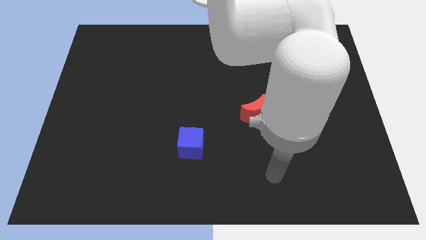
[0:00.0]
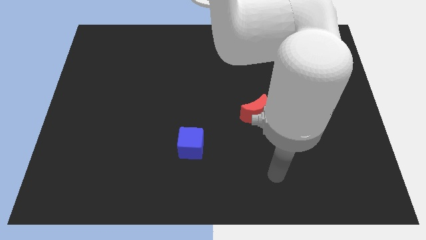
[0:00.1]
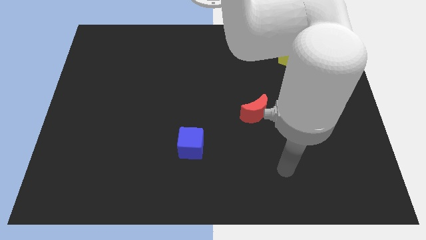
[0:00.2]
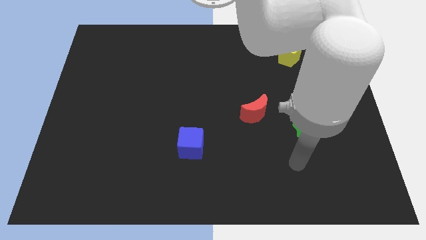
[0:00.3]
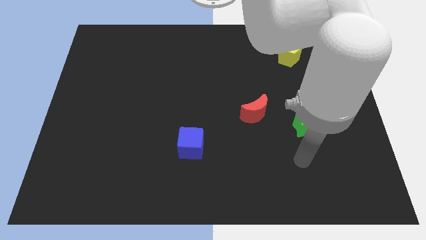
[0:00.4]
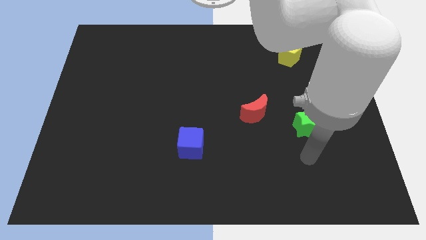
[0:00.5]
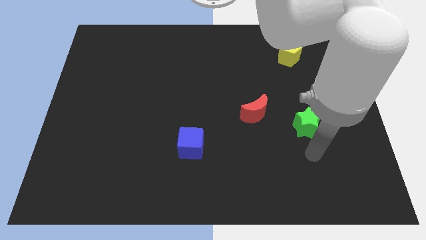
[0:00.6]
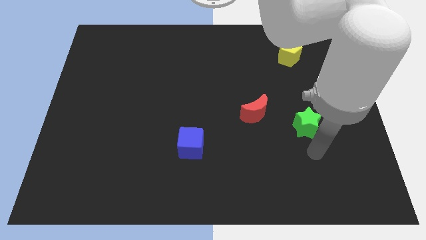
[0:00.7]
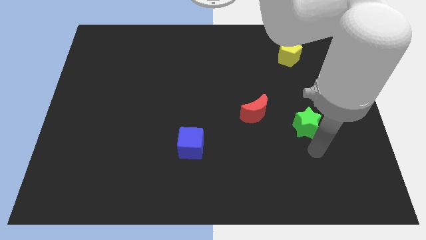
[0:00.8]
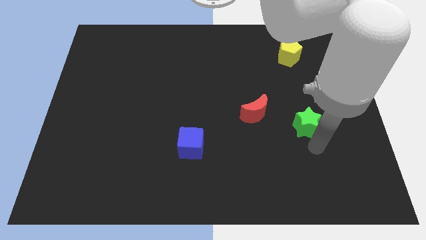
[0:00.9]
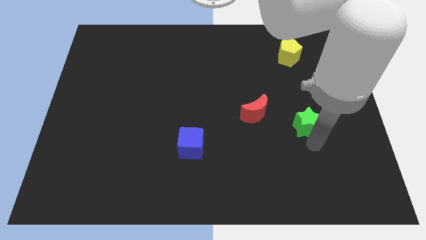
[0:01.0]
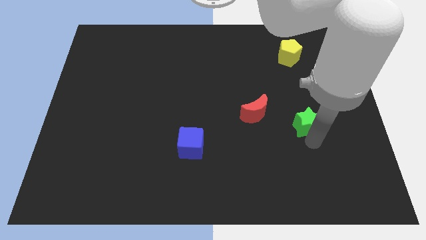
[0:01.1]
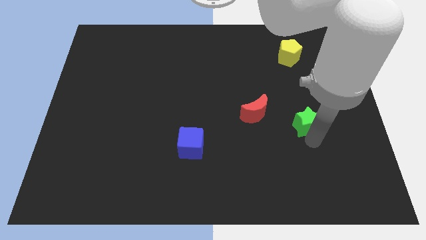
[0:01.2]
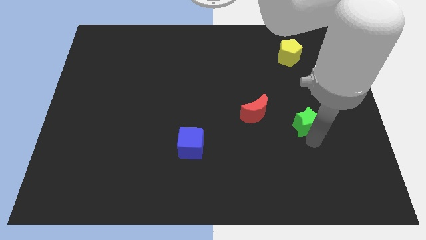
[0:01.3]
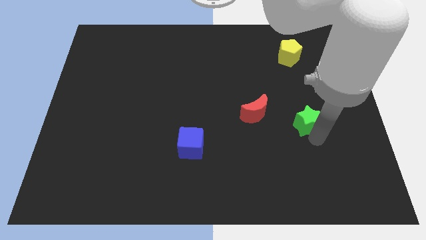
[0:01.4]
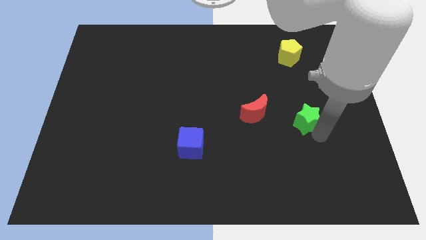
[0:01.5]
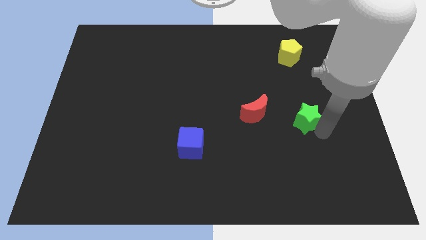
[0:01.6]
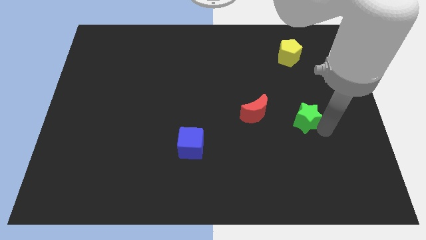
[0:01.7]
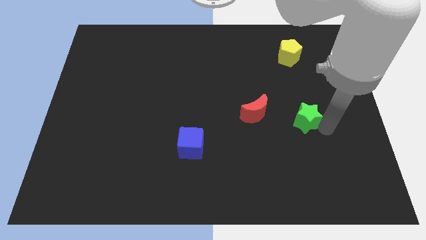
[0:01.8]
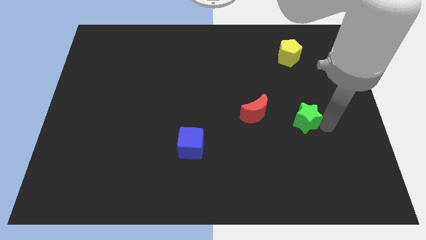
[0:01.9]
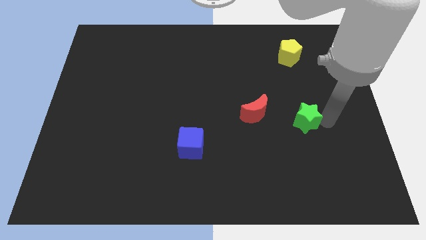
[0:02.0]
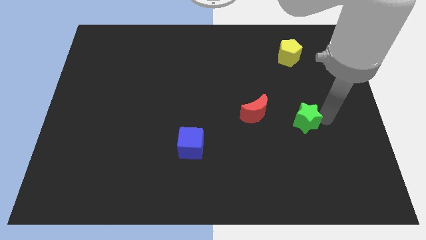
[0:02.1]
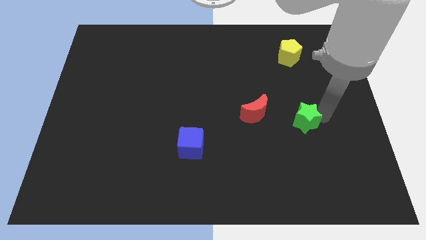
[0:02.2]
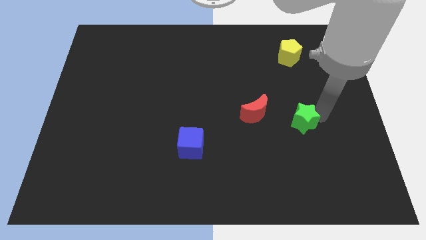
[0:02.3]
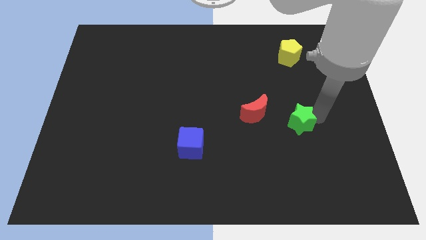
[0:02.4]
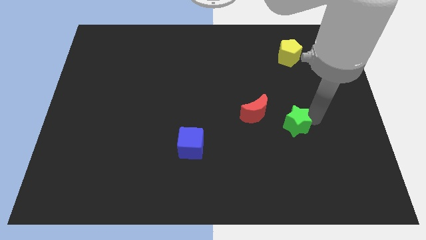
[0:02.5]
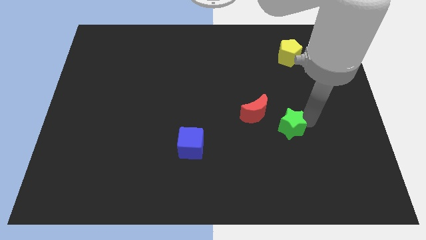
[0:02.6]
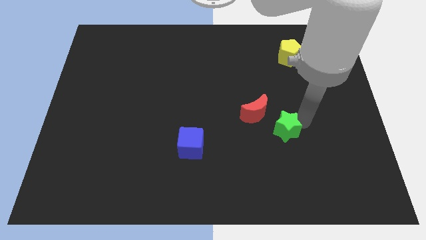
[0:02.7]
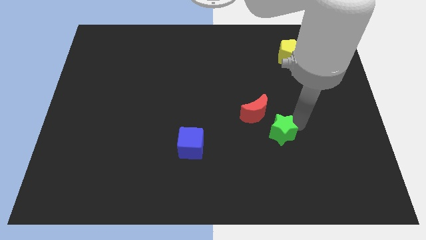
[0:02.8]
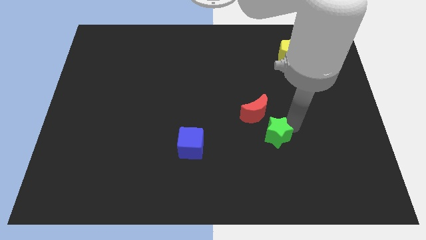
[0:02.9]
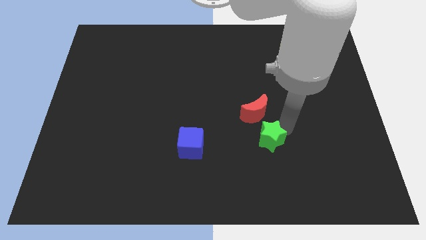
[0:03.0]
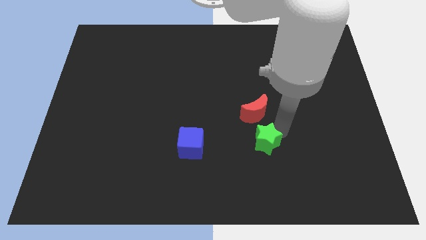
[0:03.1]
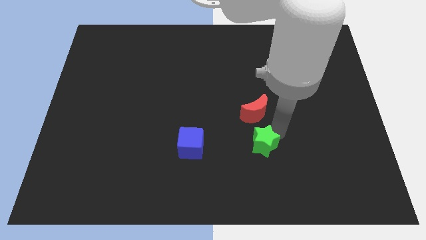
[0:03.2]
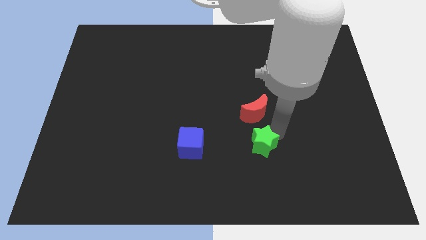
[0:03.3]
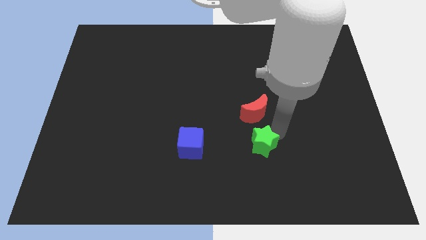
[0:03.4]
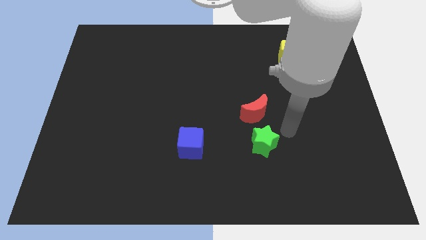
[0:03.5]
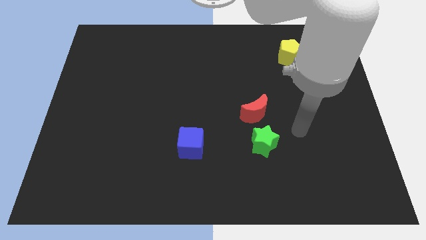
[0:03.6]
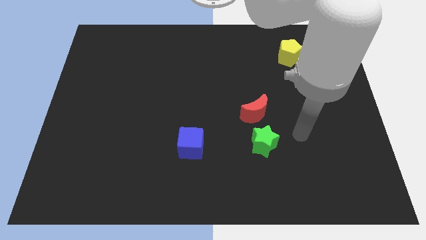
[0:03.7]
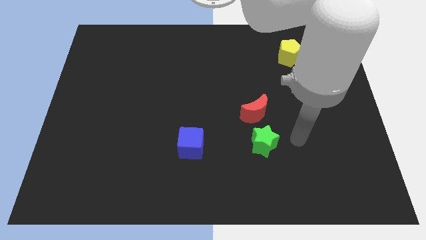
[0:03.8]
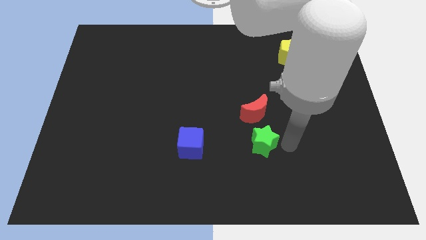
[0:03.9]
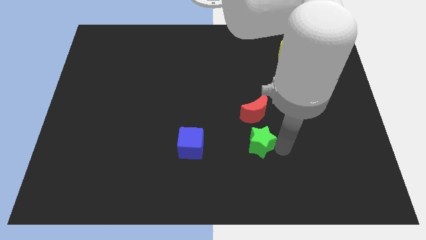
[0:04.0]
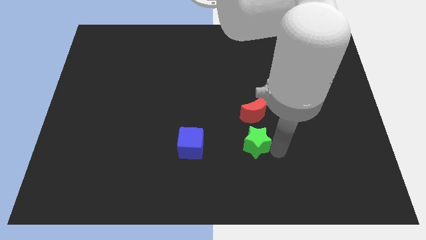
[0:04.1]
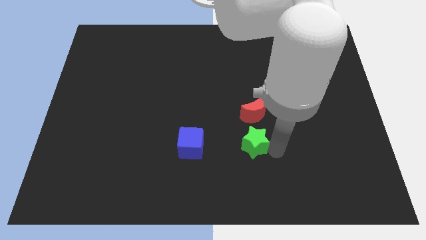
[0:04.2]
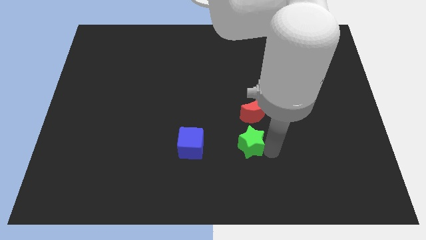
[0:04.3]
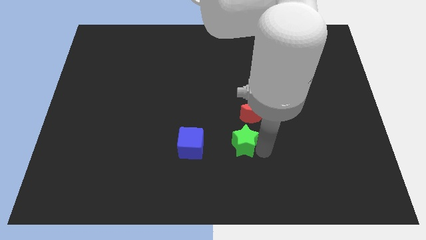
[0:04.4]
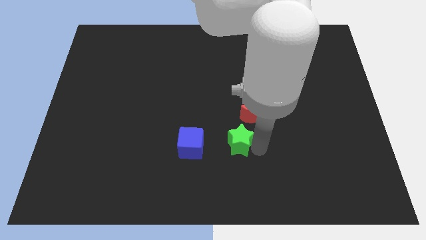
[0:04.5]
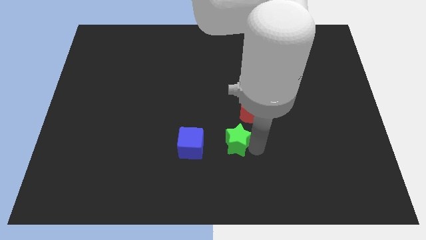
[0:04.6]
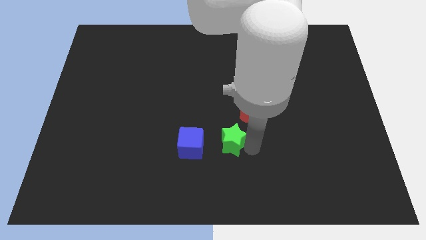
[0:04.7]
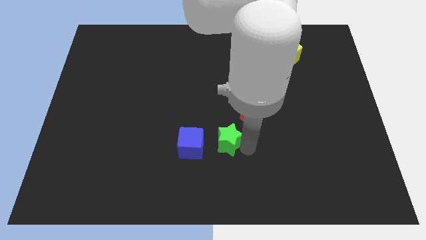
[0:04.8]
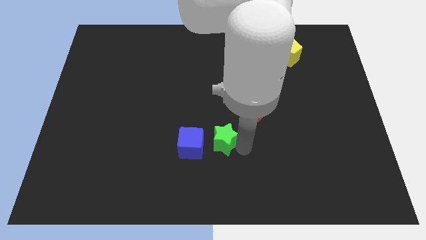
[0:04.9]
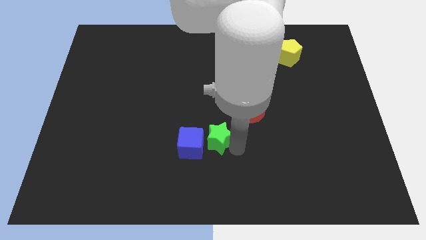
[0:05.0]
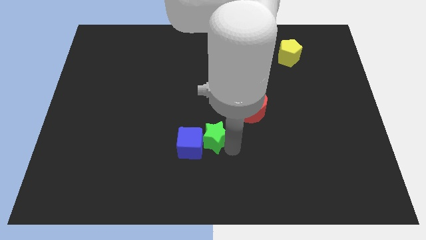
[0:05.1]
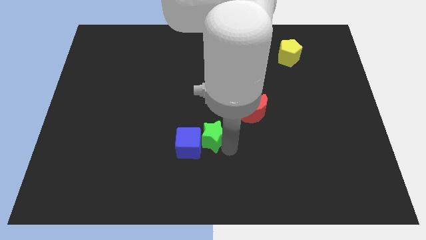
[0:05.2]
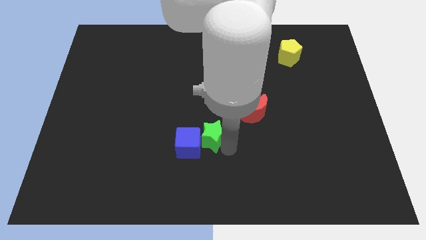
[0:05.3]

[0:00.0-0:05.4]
move the green star close to the blue cube

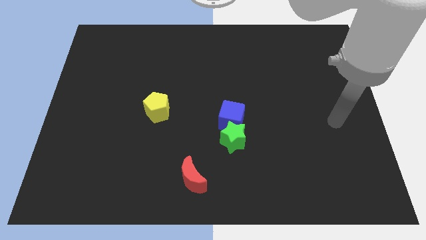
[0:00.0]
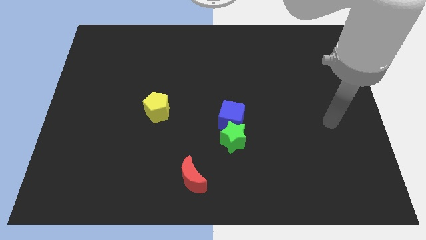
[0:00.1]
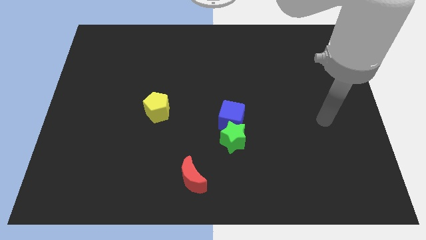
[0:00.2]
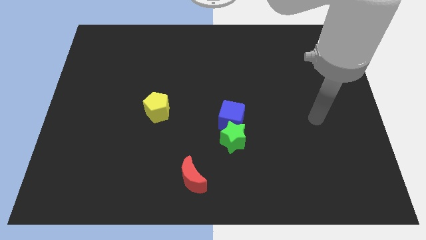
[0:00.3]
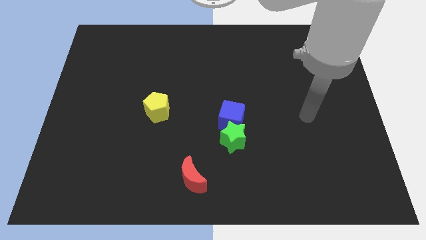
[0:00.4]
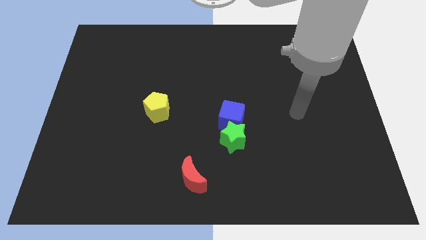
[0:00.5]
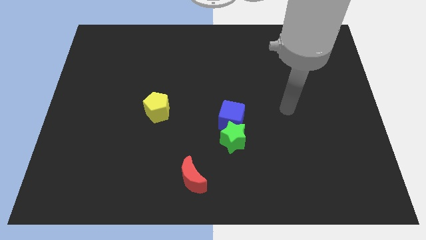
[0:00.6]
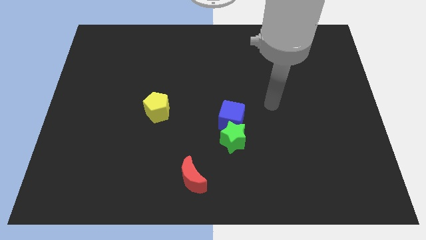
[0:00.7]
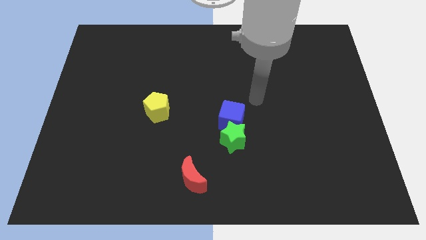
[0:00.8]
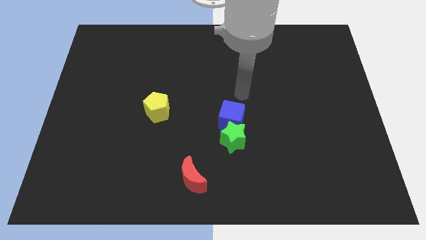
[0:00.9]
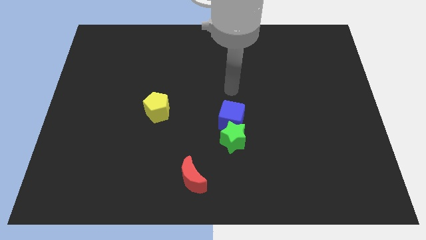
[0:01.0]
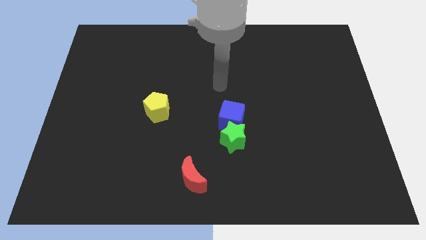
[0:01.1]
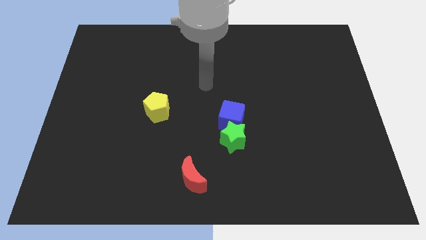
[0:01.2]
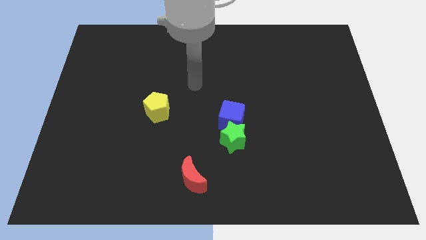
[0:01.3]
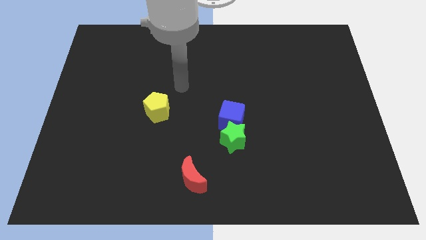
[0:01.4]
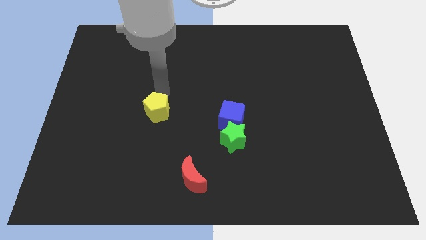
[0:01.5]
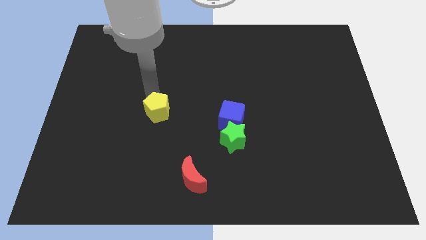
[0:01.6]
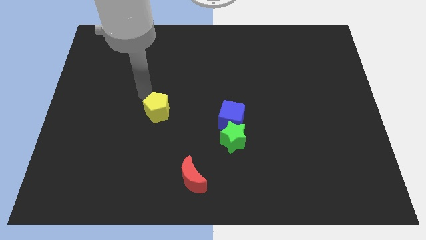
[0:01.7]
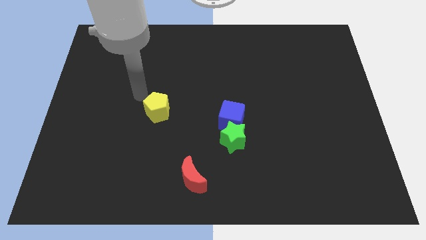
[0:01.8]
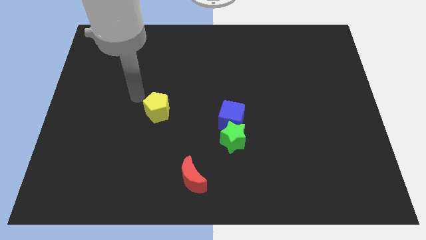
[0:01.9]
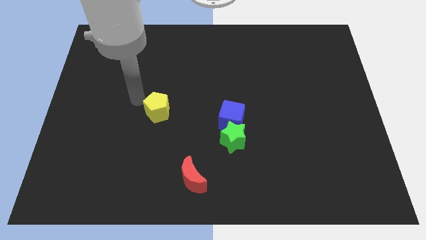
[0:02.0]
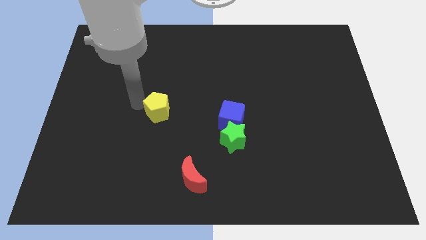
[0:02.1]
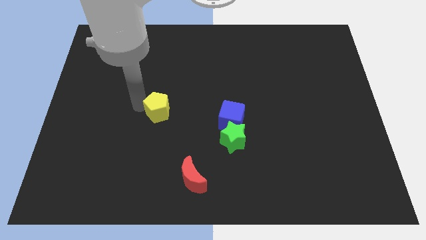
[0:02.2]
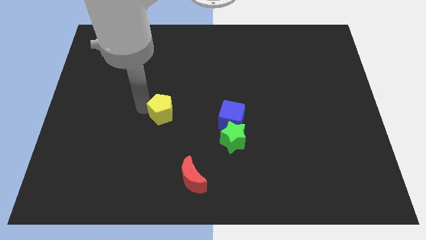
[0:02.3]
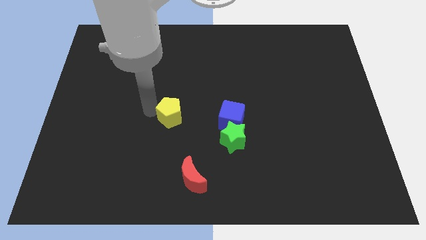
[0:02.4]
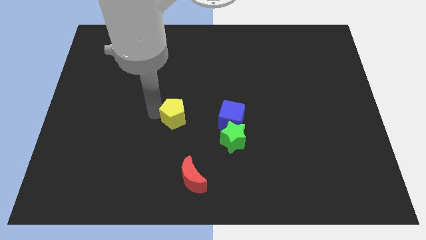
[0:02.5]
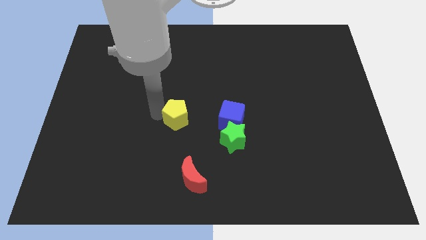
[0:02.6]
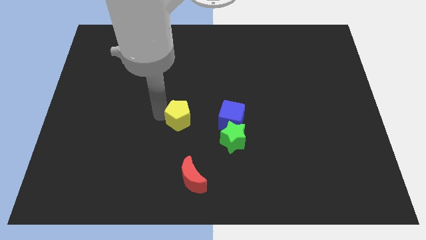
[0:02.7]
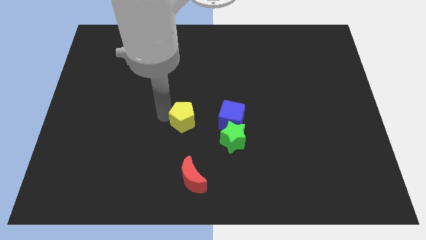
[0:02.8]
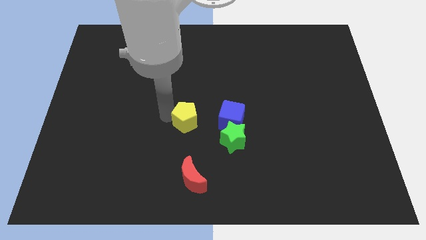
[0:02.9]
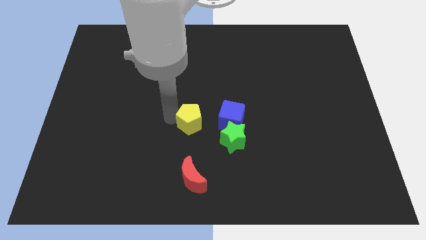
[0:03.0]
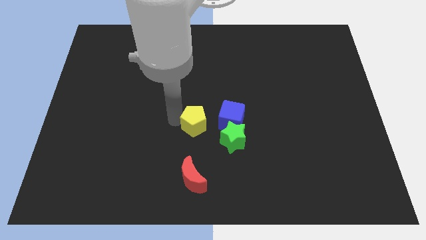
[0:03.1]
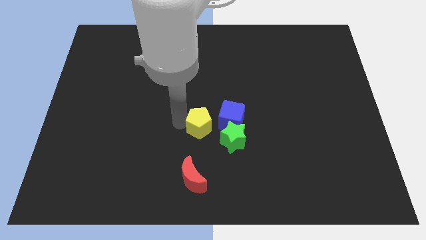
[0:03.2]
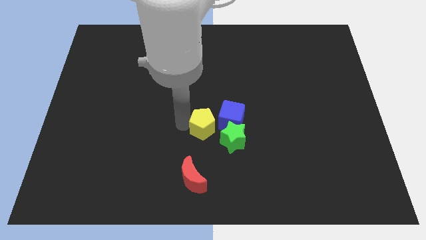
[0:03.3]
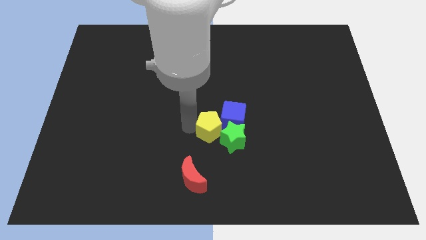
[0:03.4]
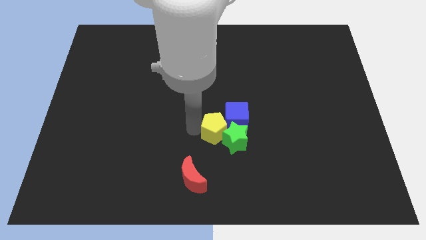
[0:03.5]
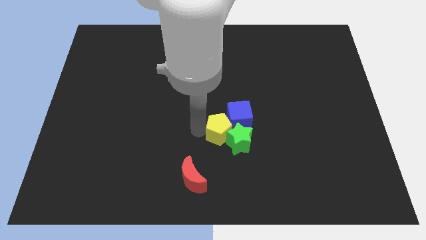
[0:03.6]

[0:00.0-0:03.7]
move the yellow pentagon next to the green star
